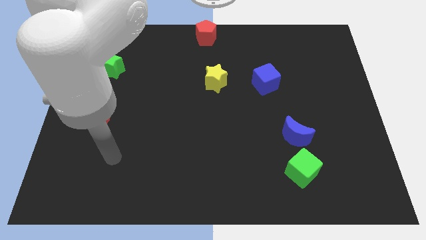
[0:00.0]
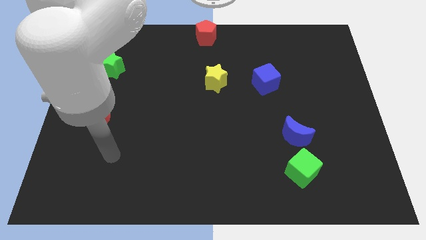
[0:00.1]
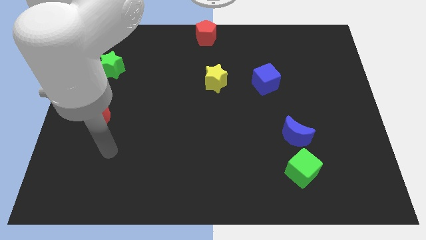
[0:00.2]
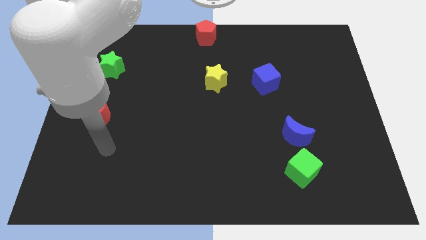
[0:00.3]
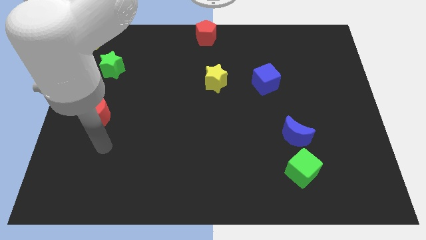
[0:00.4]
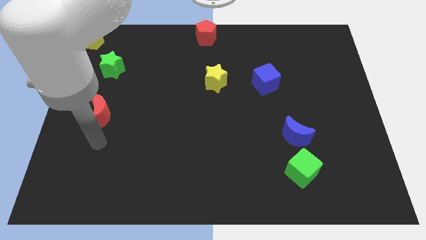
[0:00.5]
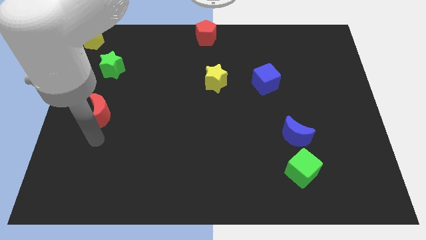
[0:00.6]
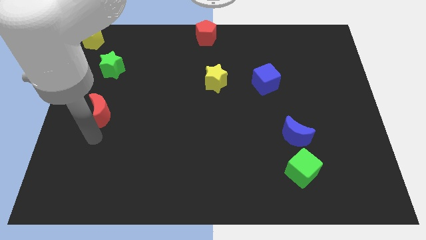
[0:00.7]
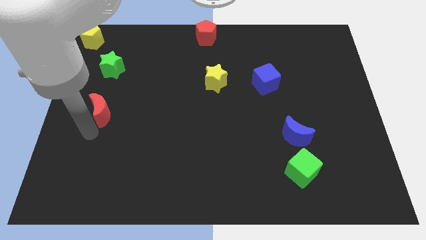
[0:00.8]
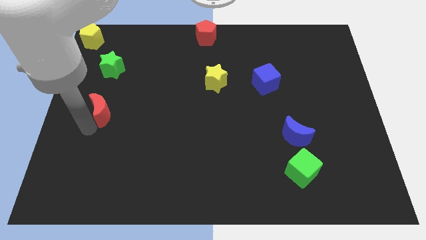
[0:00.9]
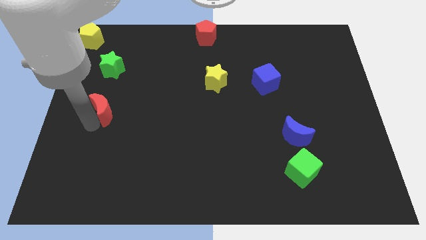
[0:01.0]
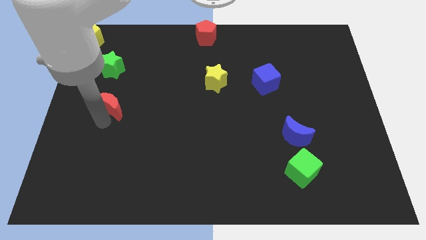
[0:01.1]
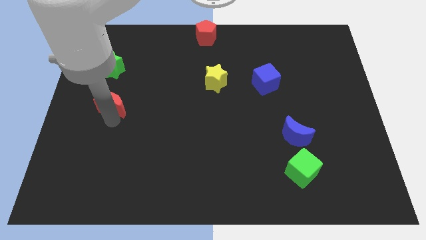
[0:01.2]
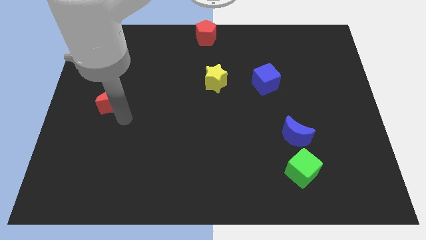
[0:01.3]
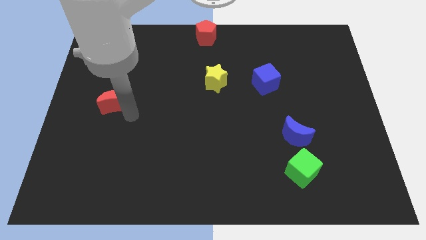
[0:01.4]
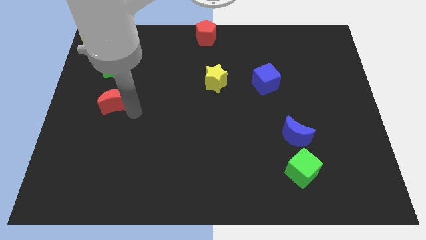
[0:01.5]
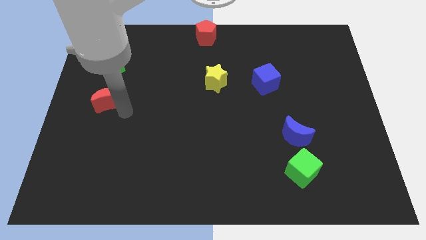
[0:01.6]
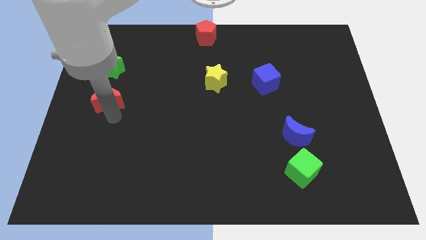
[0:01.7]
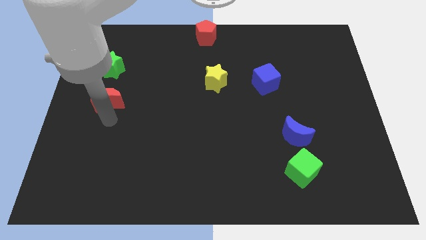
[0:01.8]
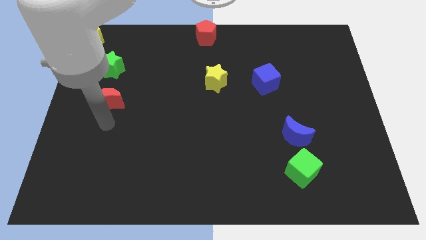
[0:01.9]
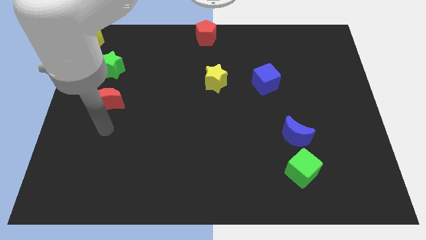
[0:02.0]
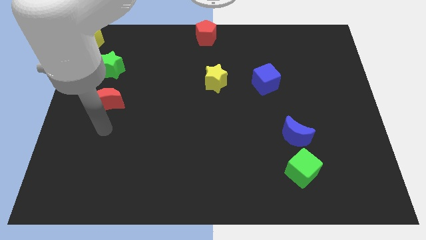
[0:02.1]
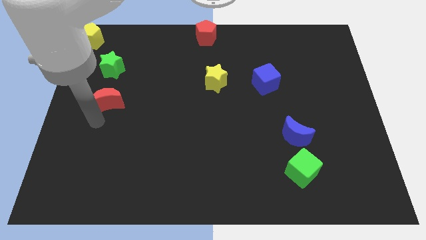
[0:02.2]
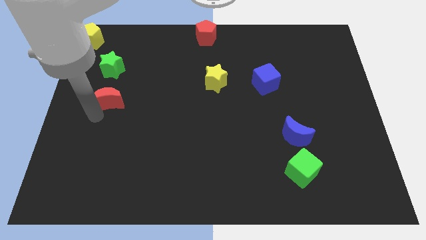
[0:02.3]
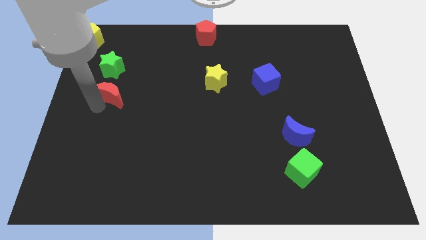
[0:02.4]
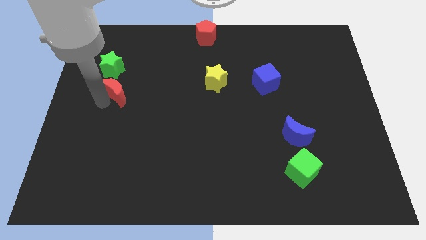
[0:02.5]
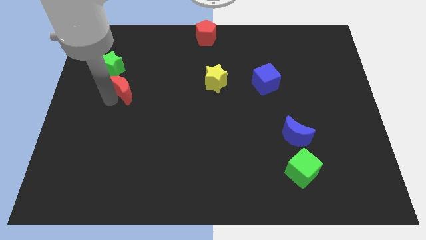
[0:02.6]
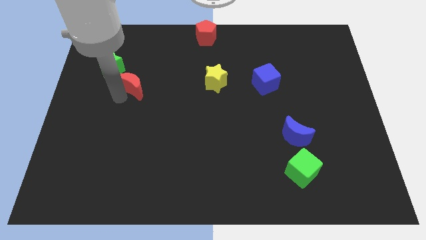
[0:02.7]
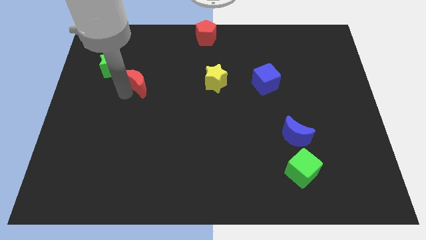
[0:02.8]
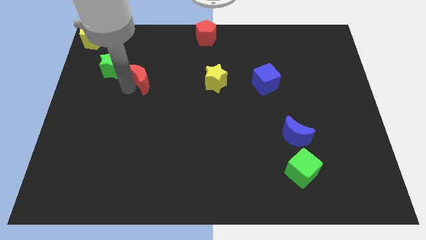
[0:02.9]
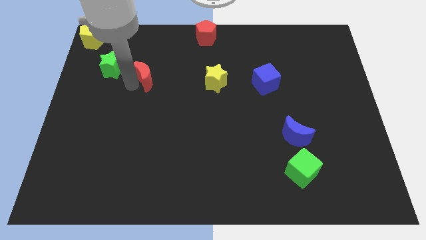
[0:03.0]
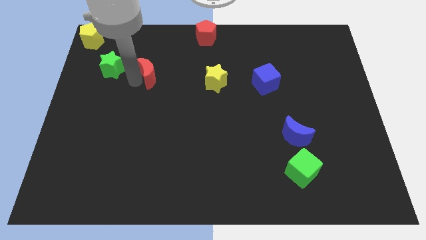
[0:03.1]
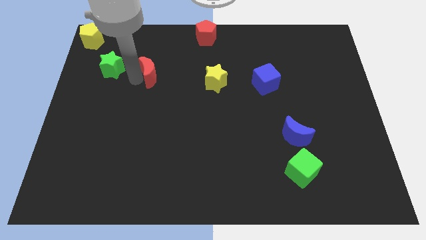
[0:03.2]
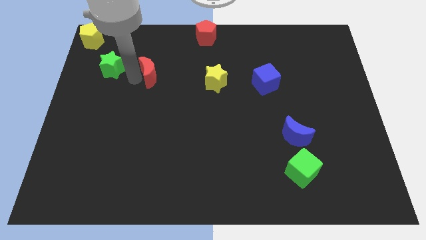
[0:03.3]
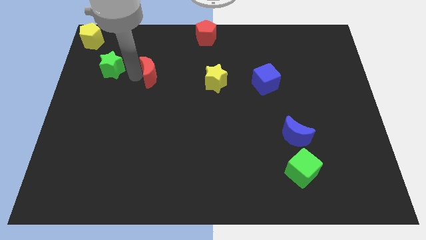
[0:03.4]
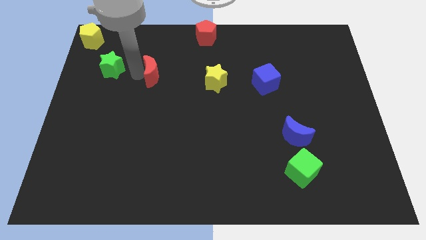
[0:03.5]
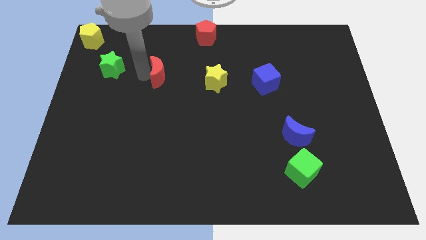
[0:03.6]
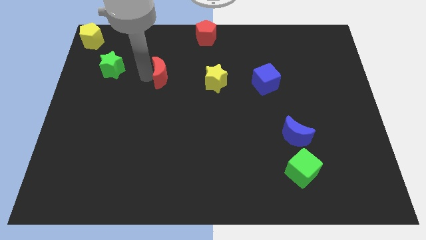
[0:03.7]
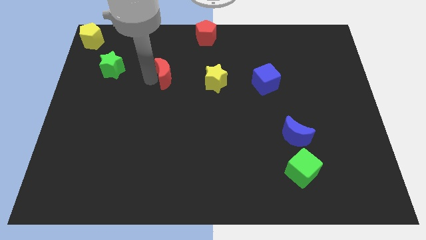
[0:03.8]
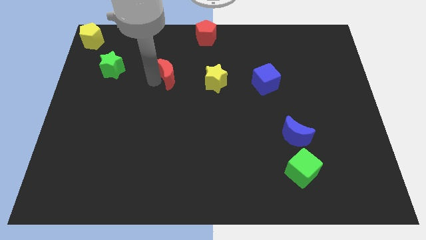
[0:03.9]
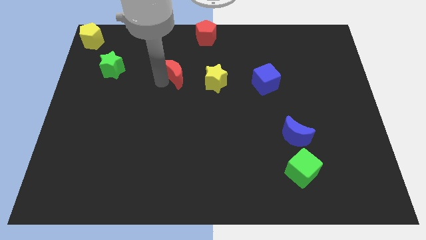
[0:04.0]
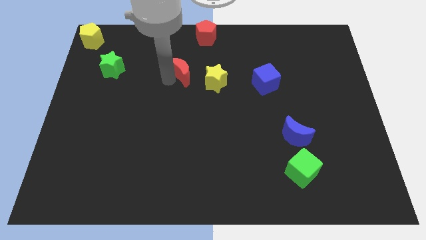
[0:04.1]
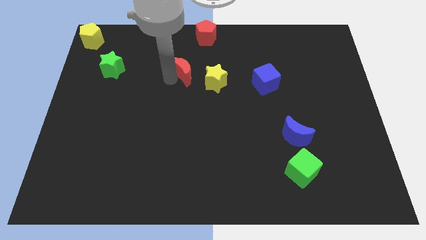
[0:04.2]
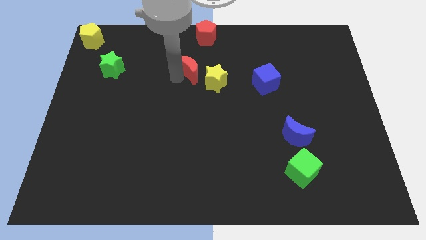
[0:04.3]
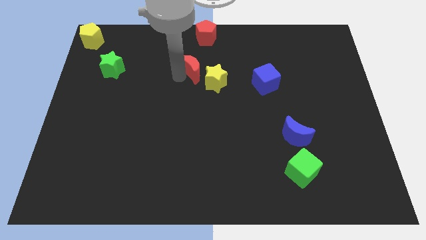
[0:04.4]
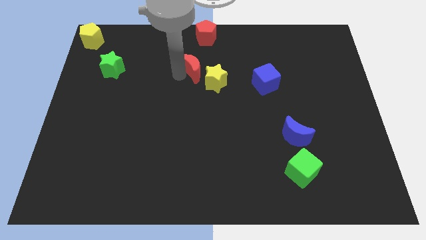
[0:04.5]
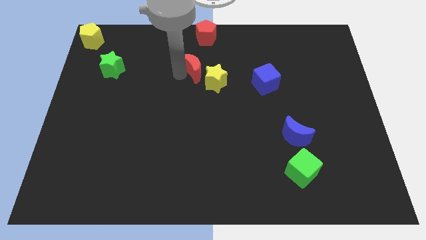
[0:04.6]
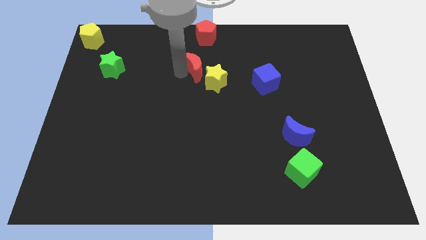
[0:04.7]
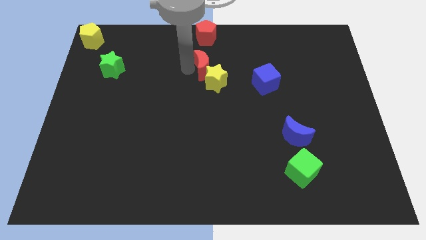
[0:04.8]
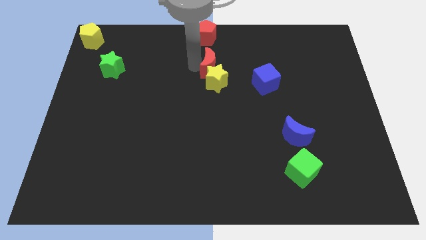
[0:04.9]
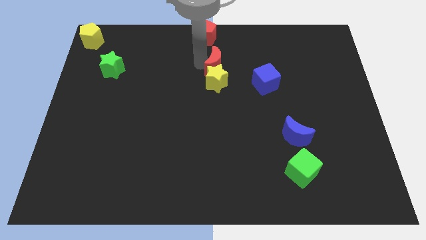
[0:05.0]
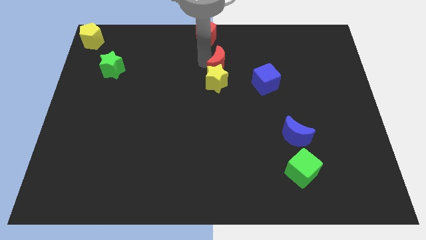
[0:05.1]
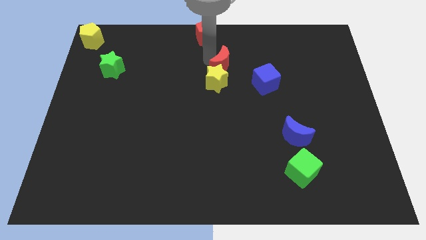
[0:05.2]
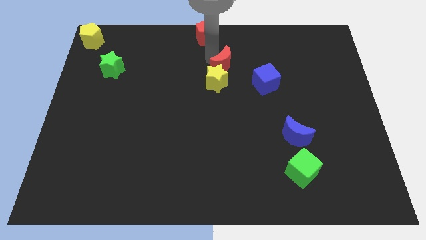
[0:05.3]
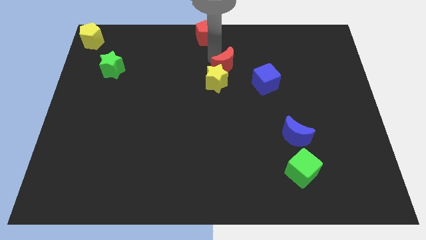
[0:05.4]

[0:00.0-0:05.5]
place the red moon on the top of the yellow star

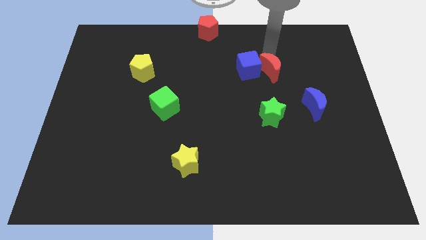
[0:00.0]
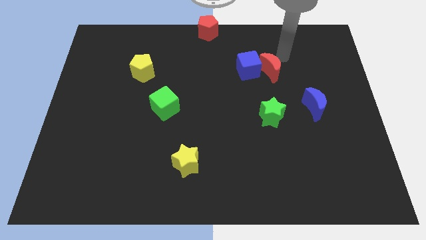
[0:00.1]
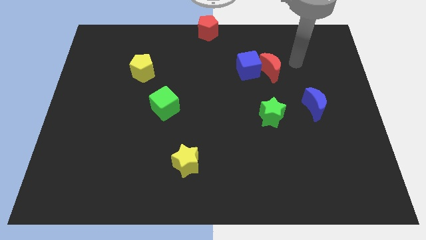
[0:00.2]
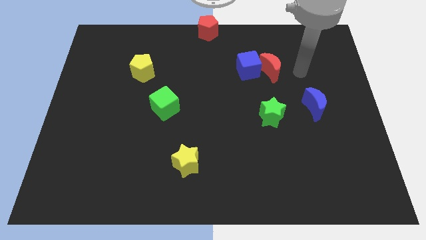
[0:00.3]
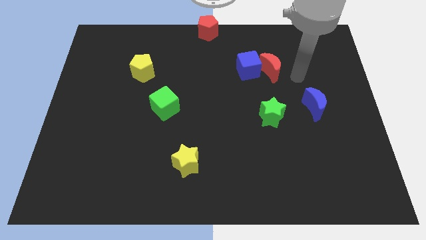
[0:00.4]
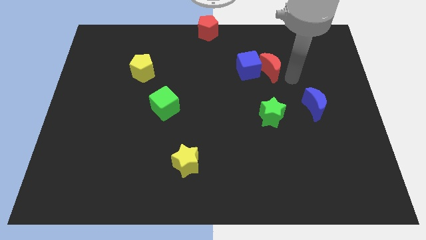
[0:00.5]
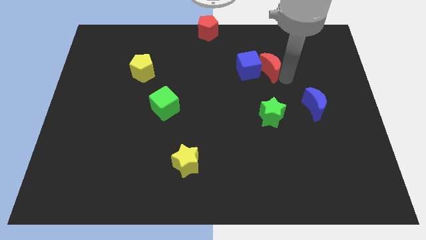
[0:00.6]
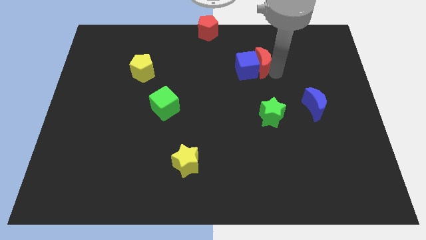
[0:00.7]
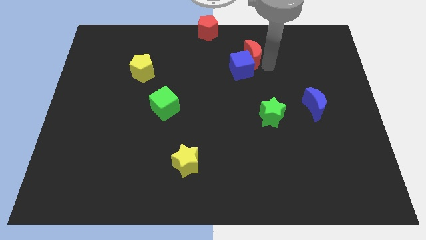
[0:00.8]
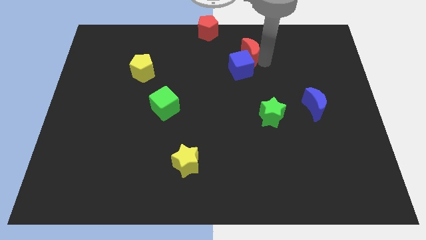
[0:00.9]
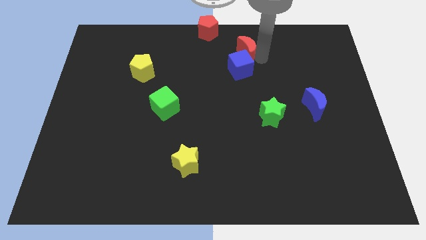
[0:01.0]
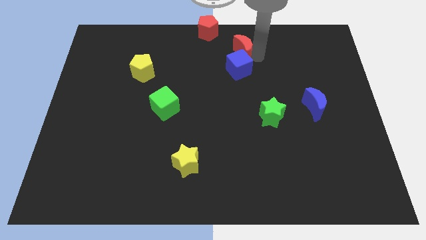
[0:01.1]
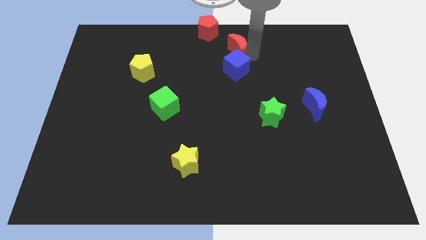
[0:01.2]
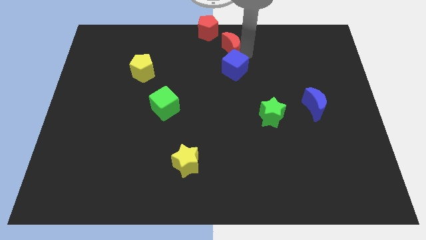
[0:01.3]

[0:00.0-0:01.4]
move red moon towards red pentagon

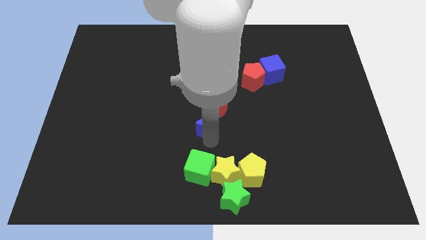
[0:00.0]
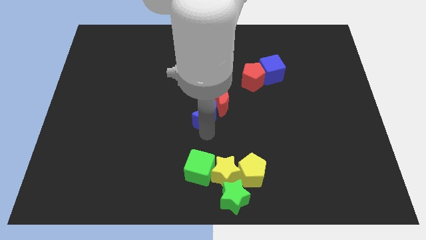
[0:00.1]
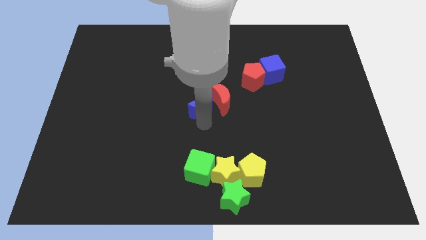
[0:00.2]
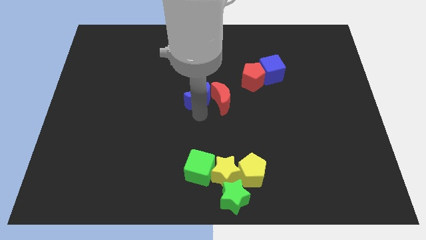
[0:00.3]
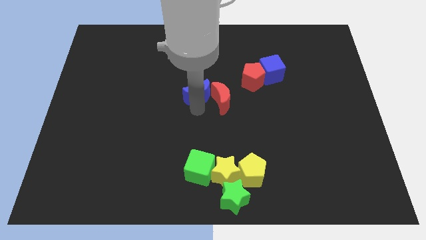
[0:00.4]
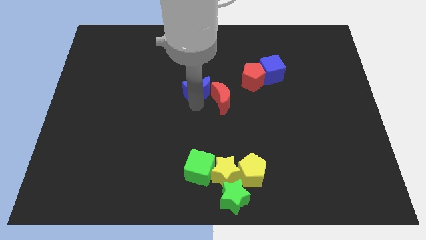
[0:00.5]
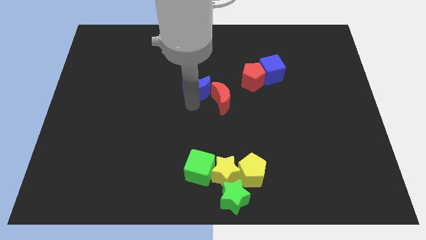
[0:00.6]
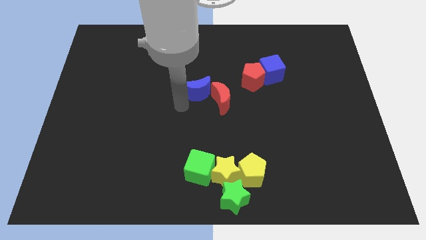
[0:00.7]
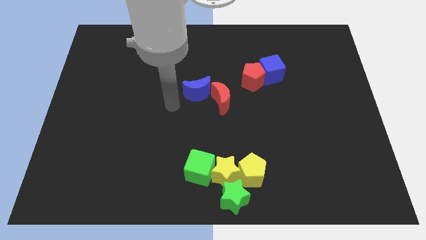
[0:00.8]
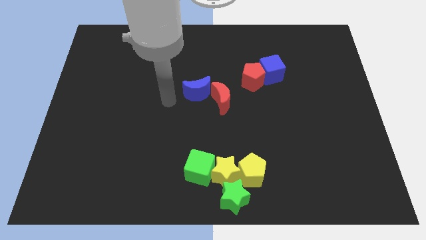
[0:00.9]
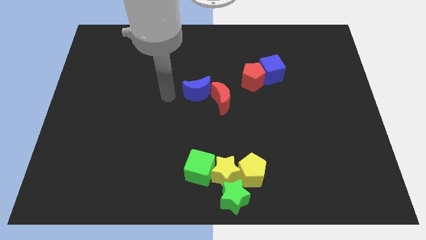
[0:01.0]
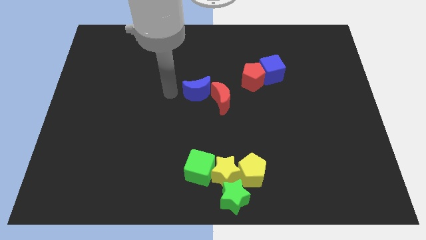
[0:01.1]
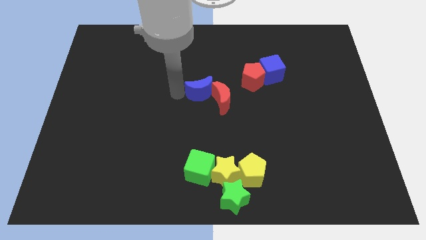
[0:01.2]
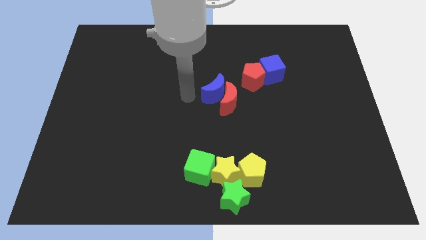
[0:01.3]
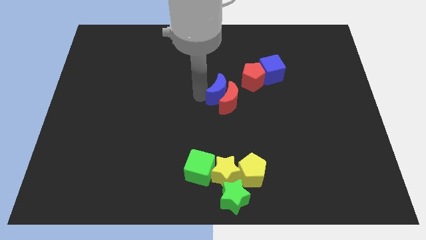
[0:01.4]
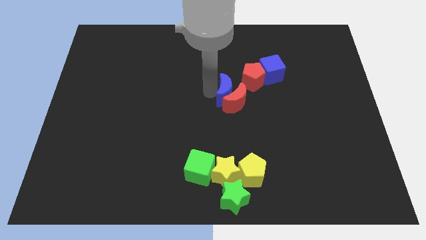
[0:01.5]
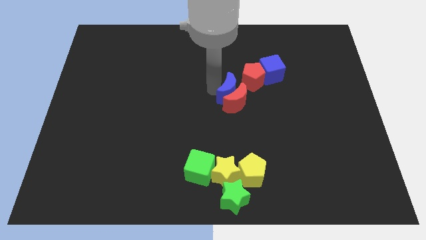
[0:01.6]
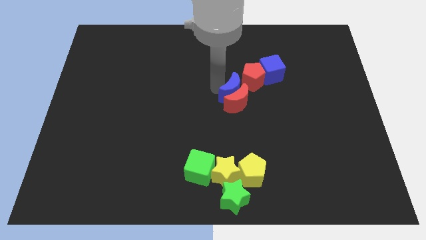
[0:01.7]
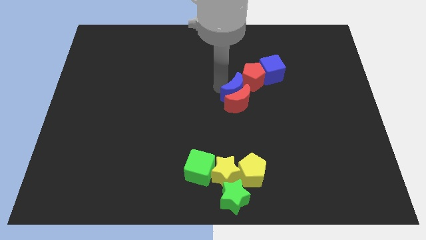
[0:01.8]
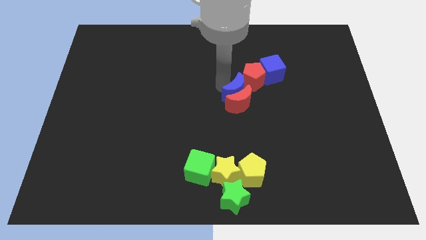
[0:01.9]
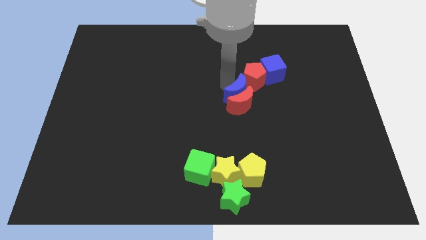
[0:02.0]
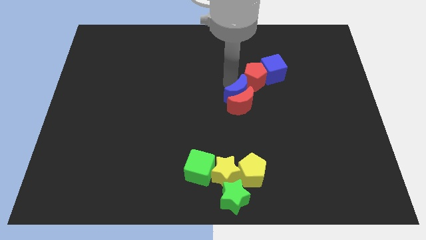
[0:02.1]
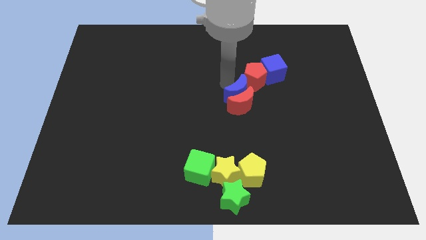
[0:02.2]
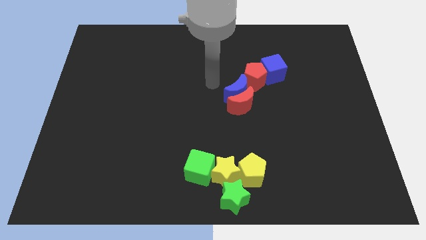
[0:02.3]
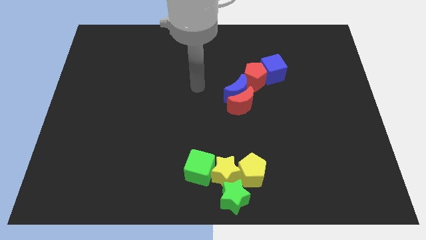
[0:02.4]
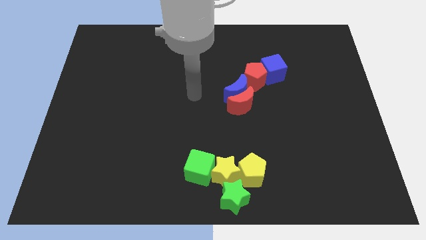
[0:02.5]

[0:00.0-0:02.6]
push red and blue moon into the red pentagon
